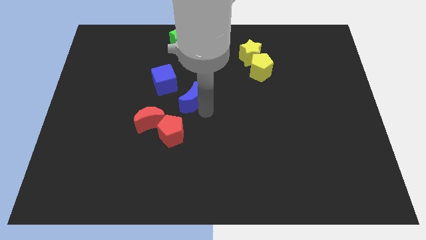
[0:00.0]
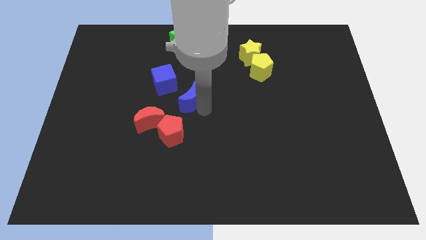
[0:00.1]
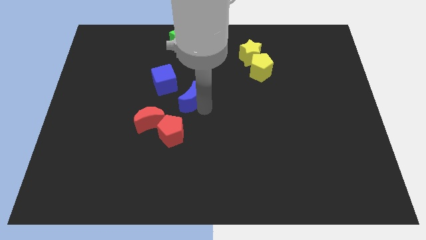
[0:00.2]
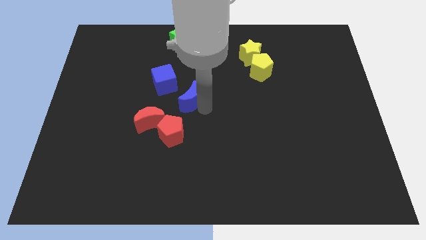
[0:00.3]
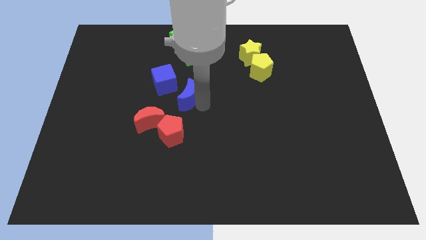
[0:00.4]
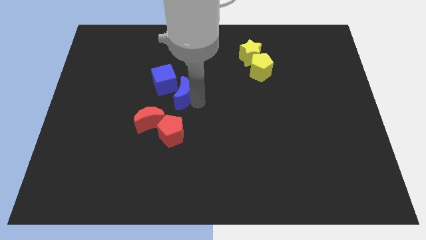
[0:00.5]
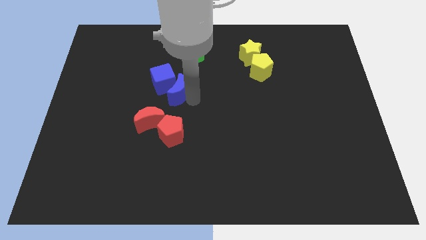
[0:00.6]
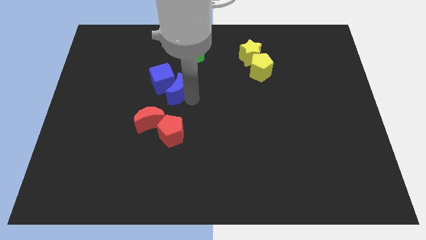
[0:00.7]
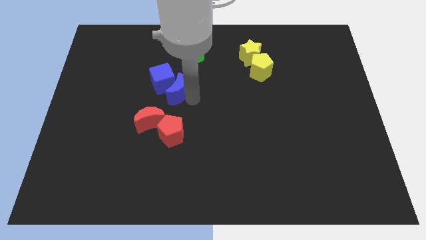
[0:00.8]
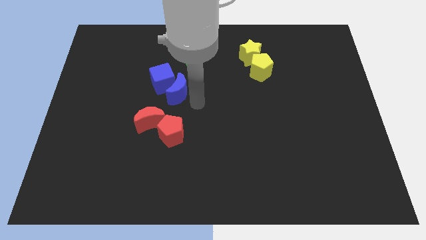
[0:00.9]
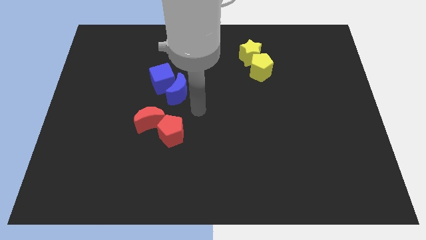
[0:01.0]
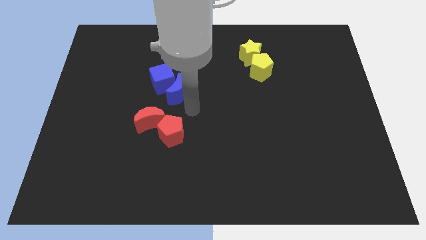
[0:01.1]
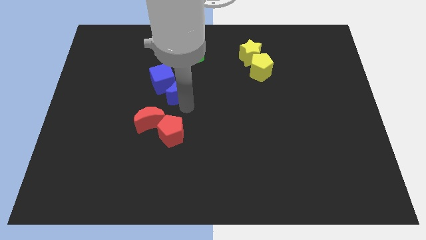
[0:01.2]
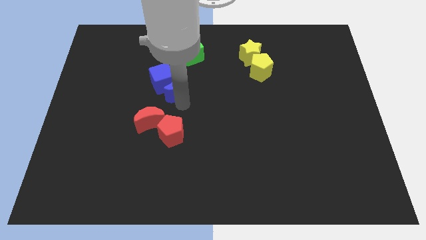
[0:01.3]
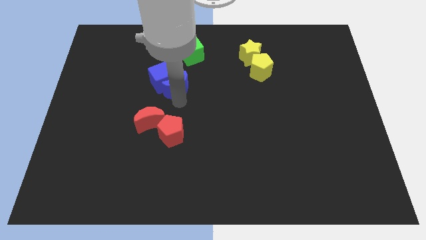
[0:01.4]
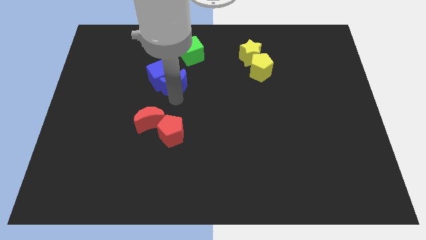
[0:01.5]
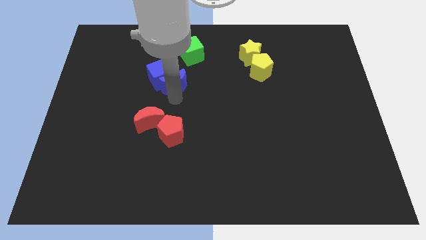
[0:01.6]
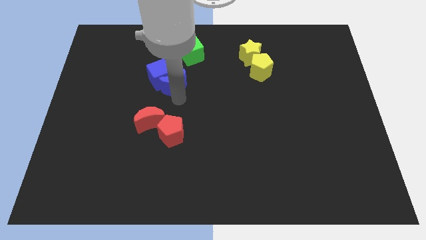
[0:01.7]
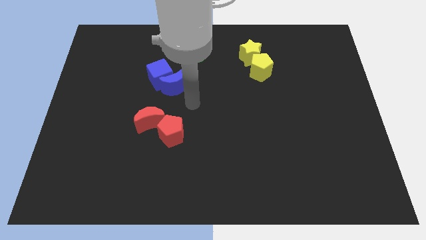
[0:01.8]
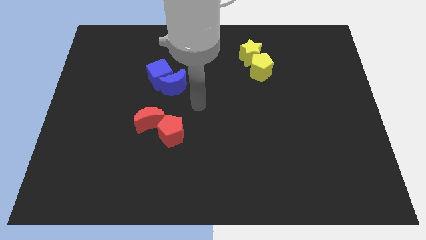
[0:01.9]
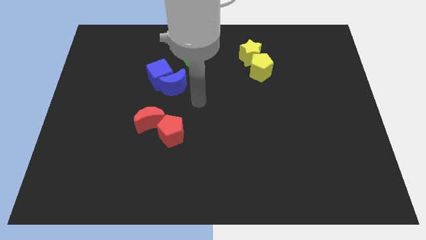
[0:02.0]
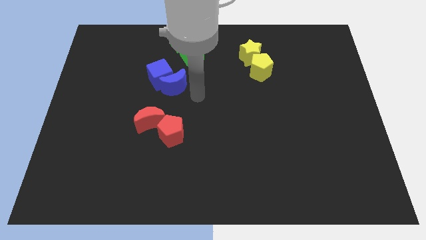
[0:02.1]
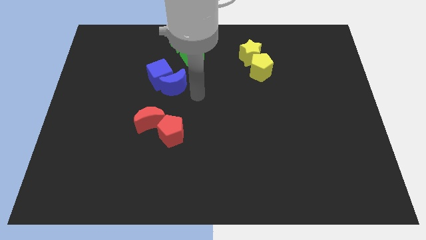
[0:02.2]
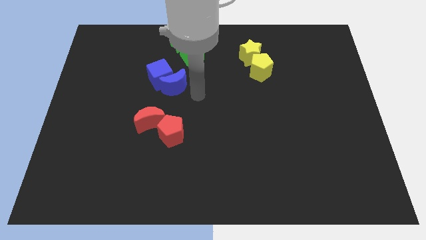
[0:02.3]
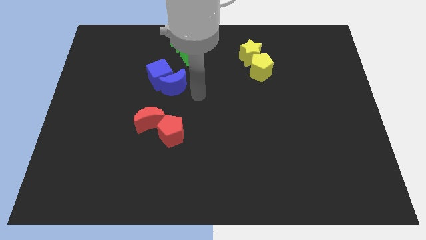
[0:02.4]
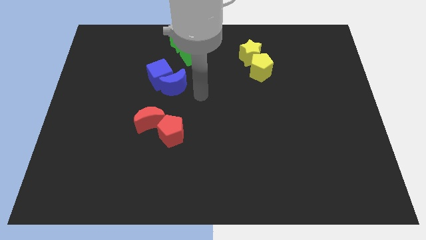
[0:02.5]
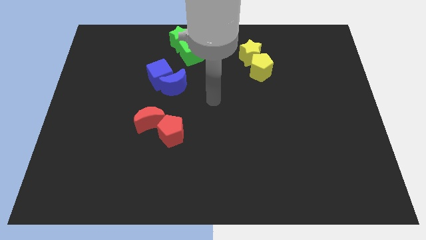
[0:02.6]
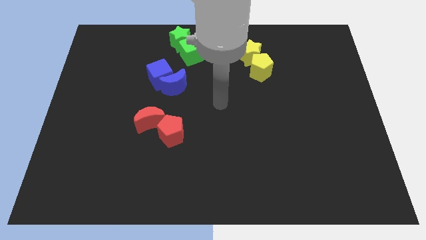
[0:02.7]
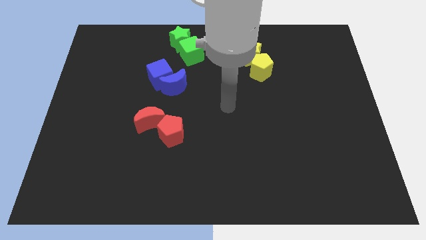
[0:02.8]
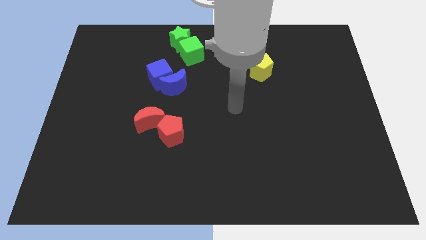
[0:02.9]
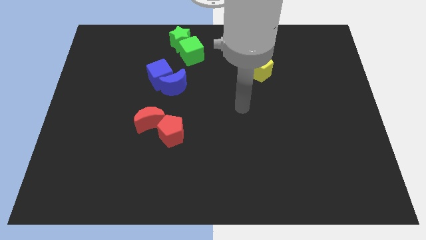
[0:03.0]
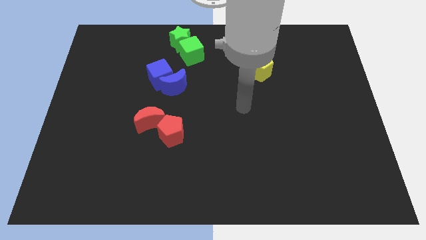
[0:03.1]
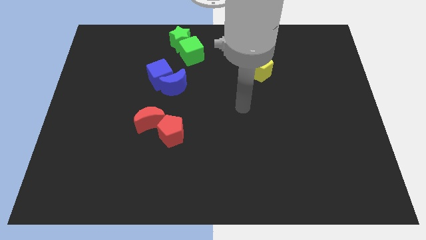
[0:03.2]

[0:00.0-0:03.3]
push the blue moon into the blue cube

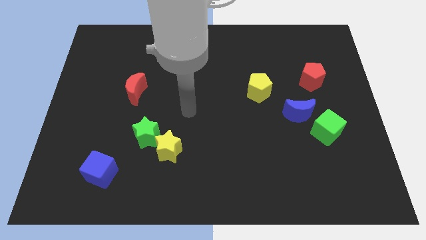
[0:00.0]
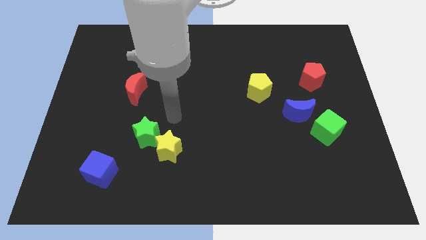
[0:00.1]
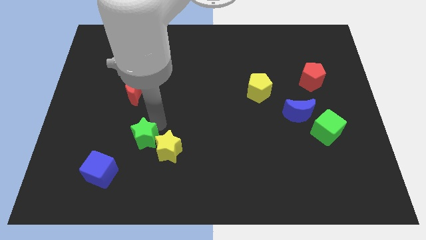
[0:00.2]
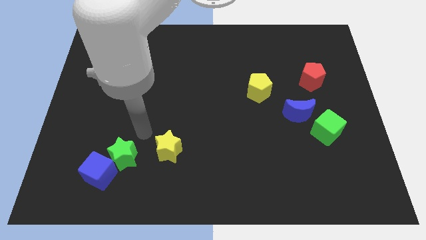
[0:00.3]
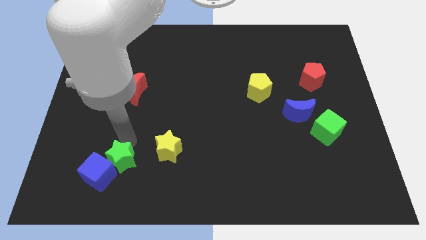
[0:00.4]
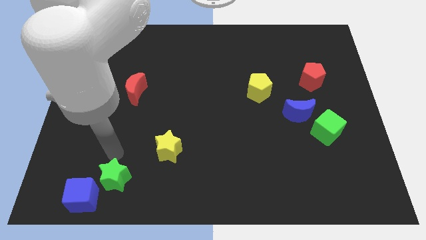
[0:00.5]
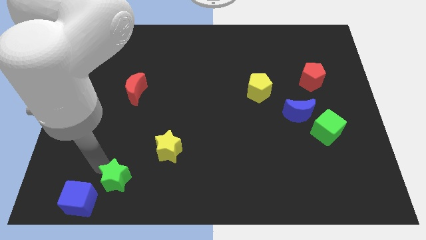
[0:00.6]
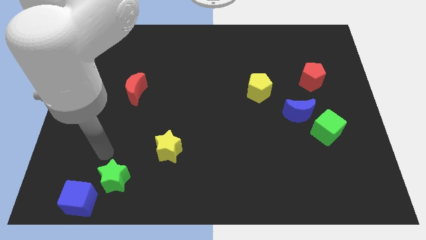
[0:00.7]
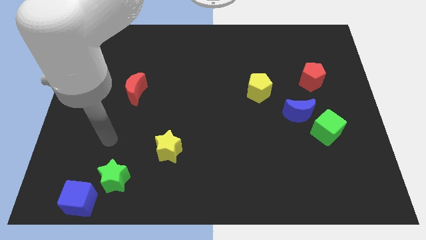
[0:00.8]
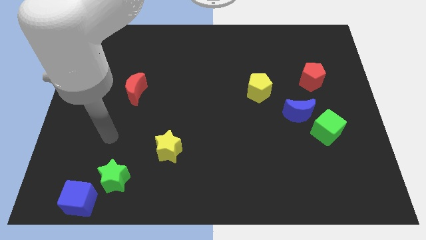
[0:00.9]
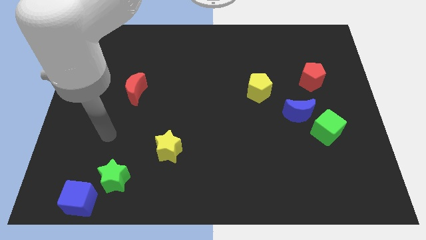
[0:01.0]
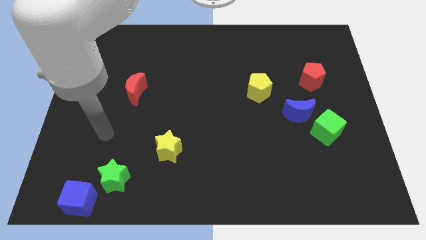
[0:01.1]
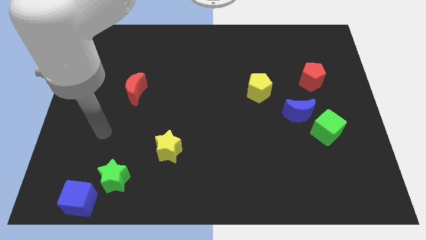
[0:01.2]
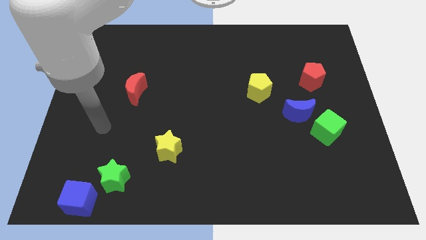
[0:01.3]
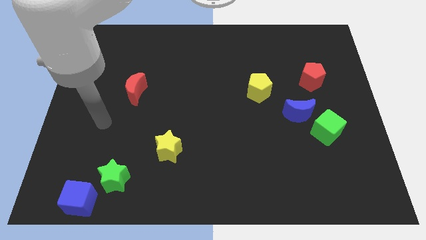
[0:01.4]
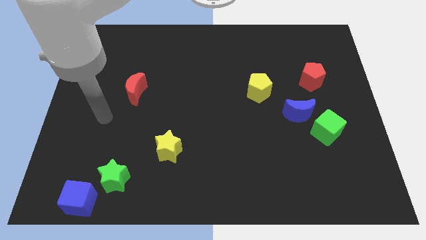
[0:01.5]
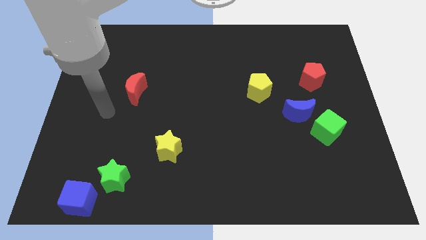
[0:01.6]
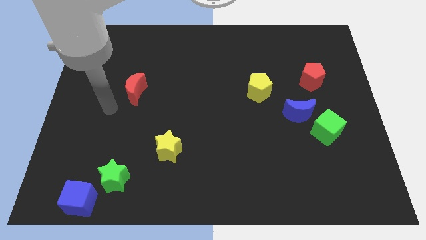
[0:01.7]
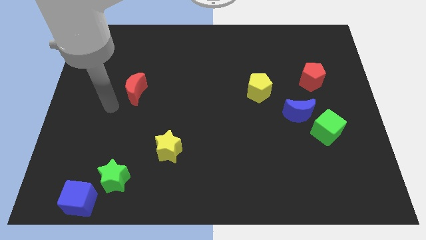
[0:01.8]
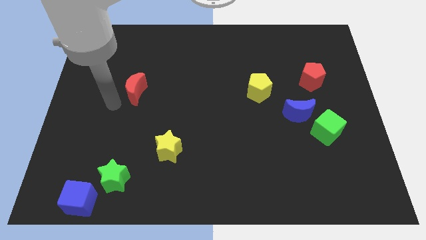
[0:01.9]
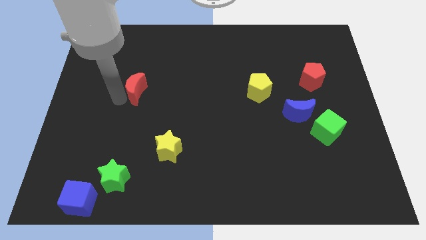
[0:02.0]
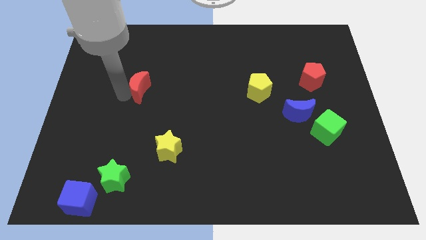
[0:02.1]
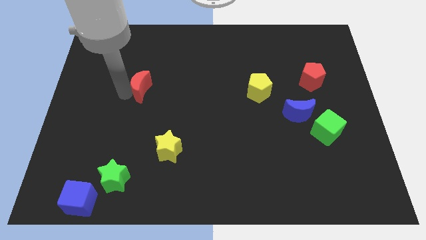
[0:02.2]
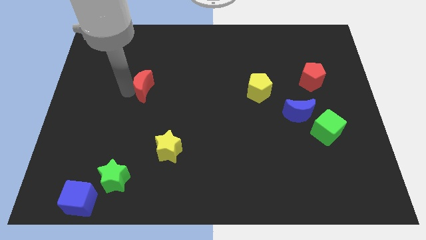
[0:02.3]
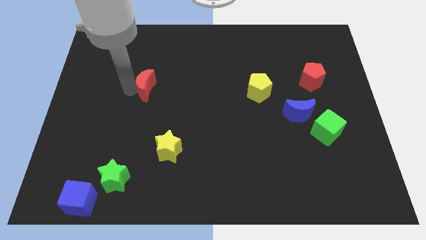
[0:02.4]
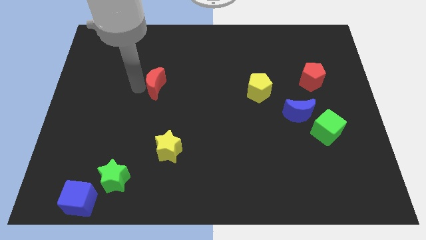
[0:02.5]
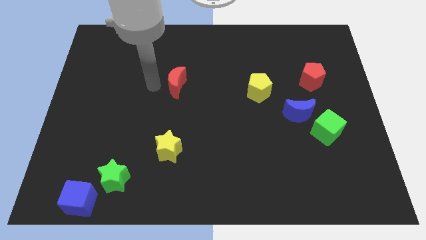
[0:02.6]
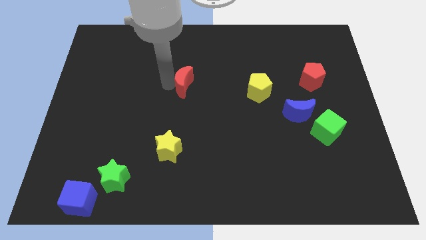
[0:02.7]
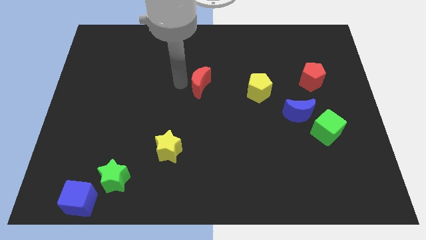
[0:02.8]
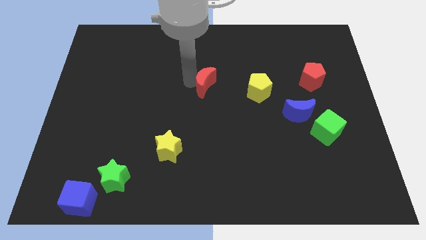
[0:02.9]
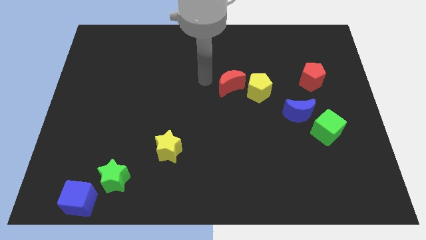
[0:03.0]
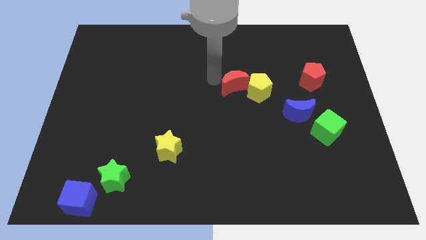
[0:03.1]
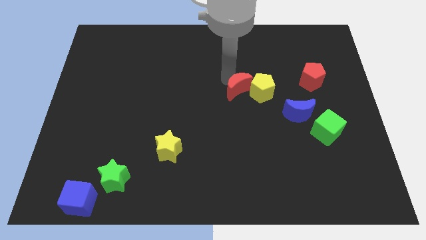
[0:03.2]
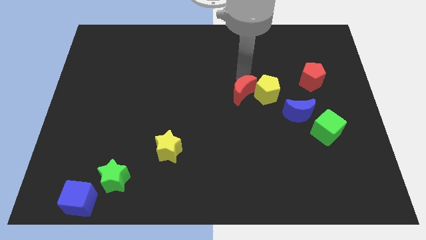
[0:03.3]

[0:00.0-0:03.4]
move the green star towards the blue cube

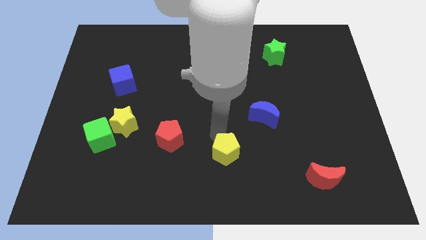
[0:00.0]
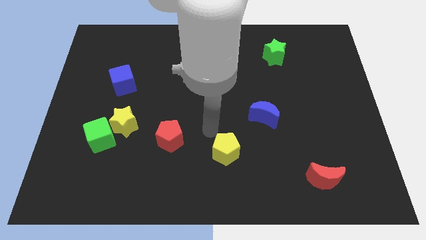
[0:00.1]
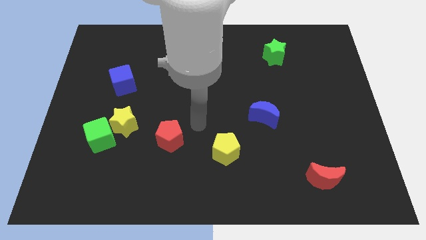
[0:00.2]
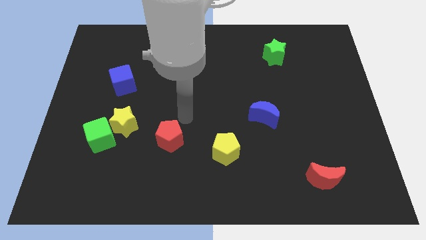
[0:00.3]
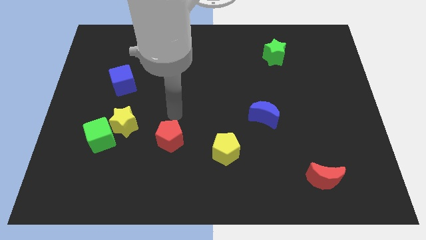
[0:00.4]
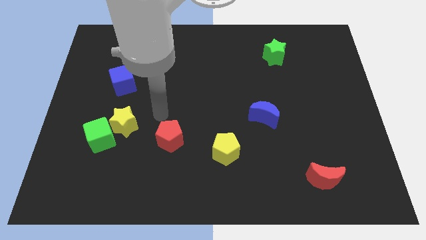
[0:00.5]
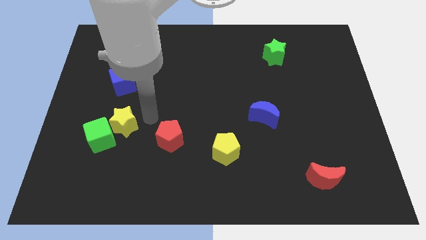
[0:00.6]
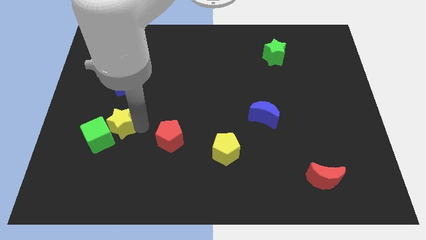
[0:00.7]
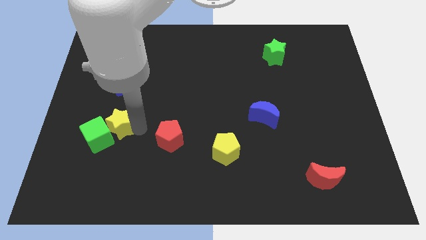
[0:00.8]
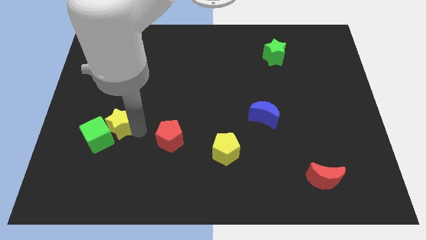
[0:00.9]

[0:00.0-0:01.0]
touch the yellow star

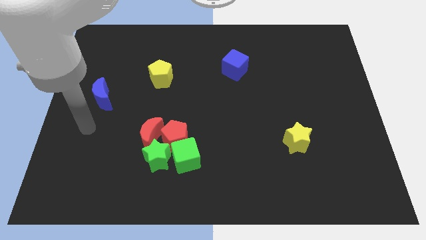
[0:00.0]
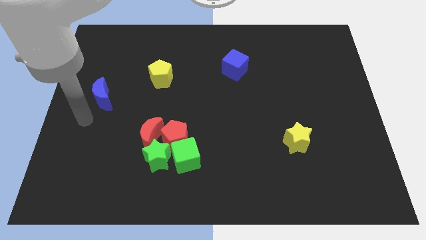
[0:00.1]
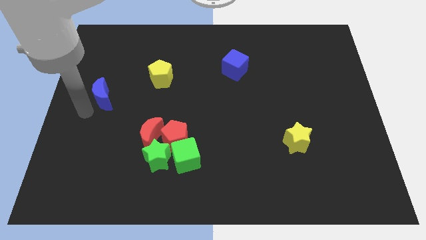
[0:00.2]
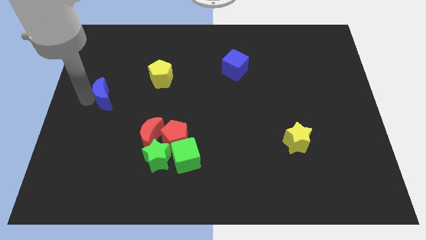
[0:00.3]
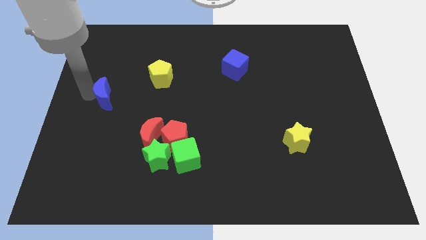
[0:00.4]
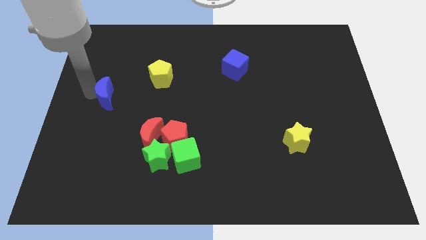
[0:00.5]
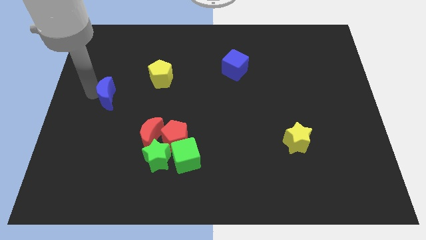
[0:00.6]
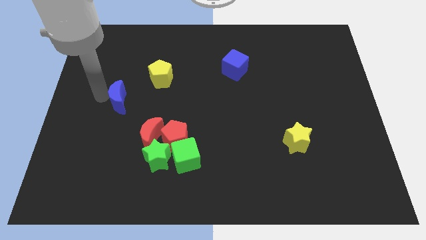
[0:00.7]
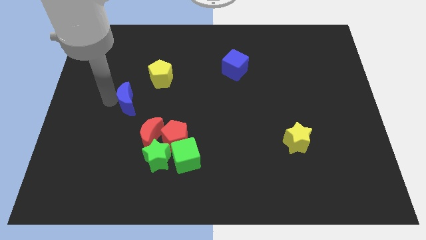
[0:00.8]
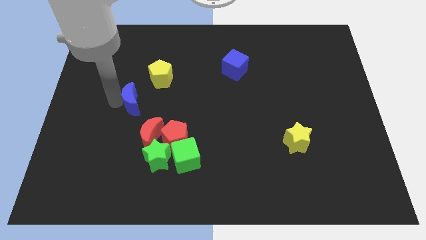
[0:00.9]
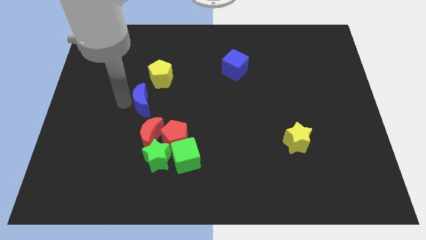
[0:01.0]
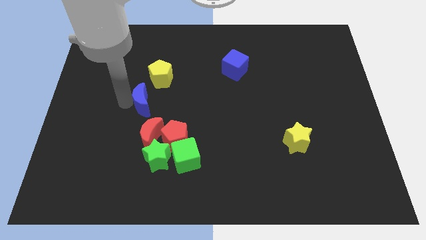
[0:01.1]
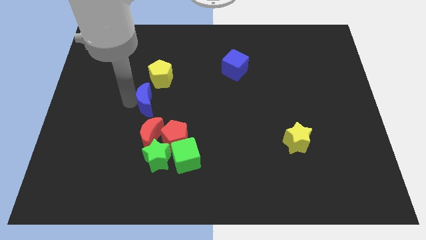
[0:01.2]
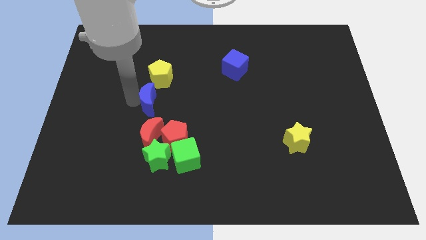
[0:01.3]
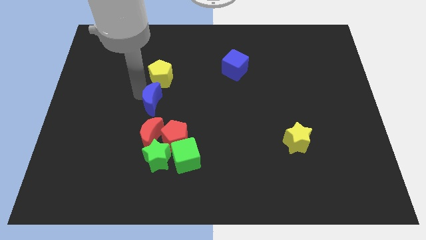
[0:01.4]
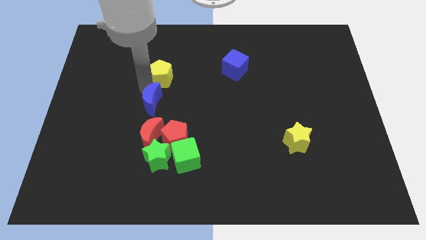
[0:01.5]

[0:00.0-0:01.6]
move the blue crescent in between the yellow pentagon and red crescent
